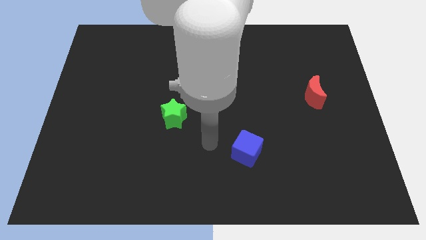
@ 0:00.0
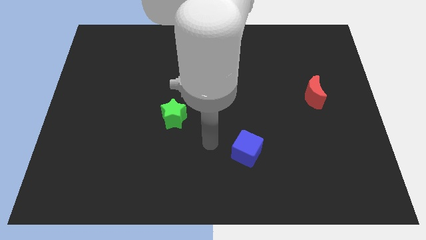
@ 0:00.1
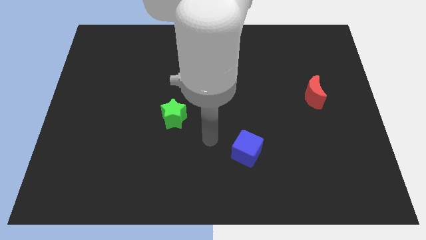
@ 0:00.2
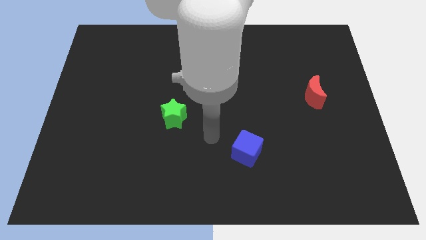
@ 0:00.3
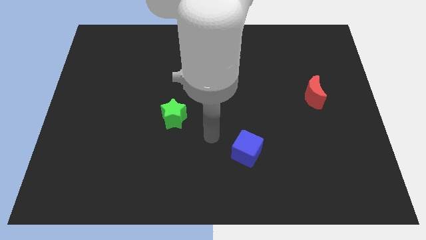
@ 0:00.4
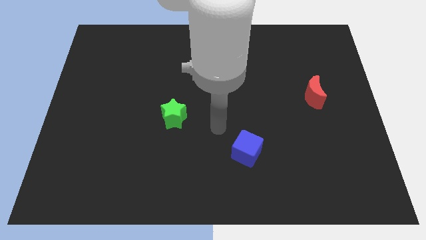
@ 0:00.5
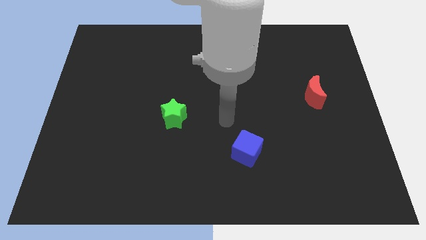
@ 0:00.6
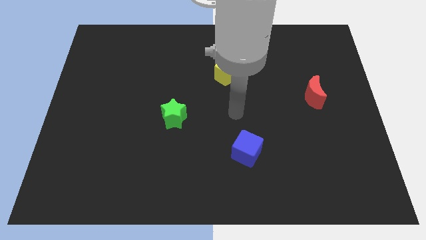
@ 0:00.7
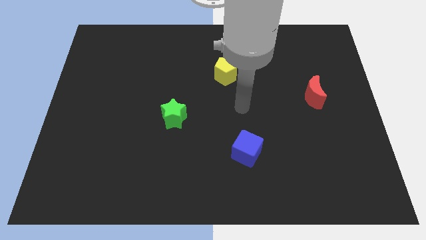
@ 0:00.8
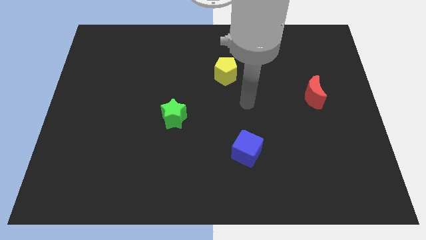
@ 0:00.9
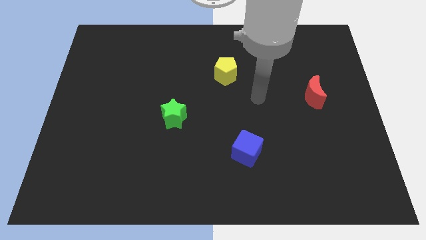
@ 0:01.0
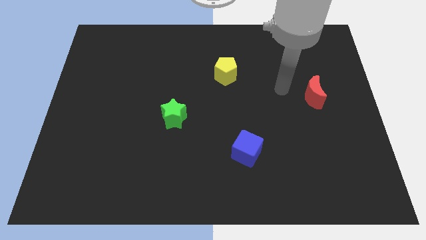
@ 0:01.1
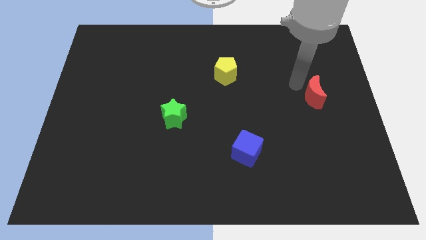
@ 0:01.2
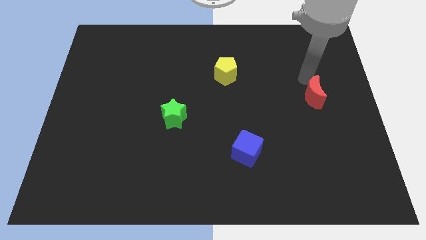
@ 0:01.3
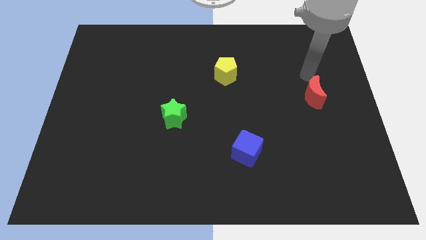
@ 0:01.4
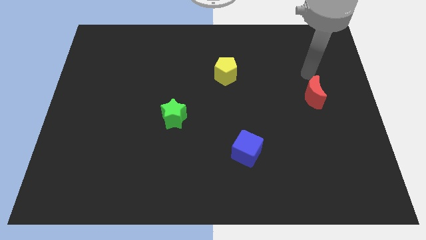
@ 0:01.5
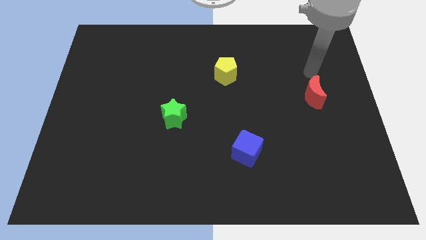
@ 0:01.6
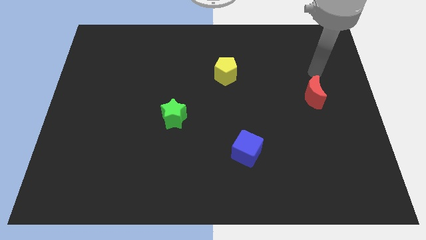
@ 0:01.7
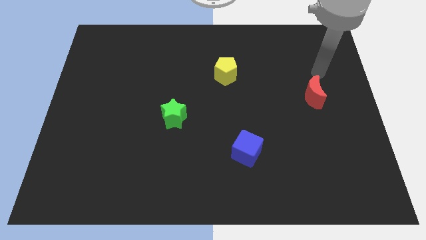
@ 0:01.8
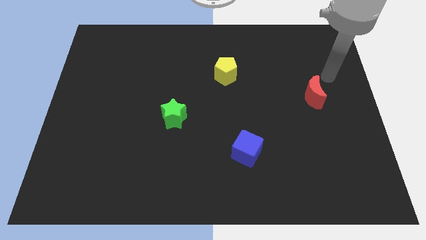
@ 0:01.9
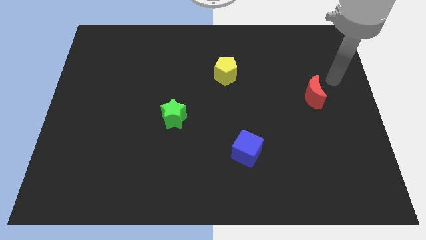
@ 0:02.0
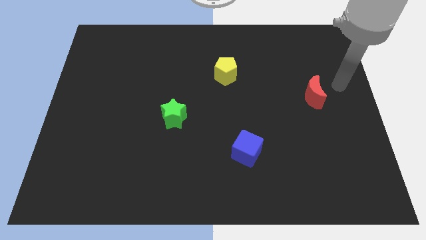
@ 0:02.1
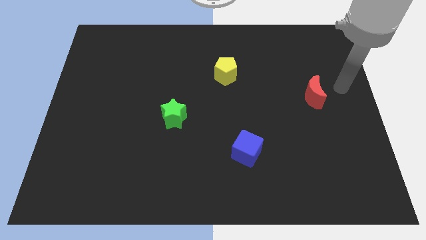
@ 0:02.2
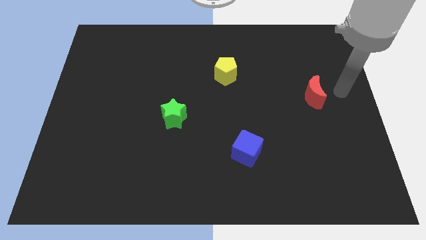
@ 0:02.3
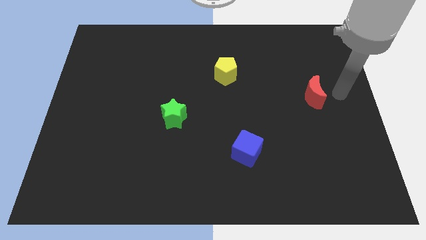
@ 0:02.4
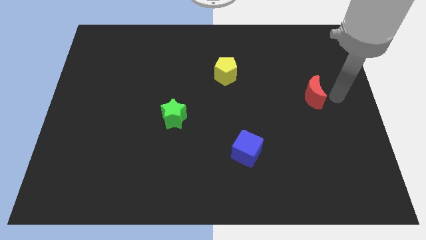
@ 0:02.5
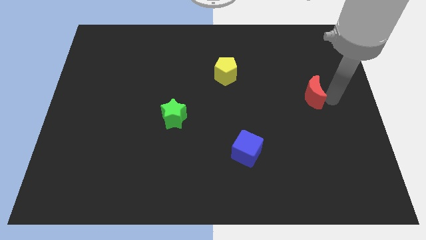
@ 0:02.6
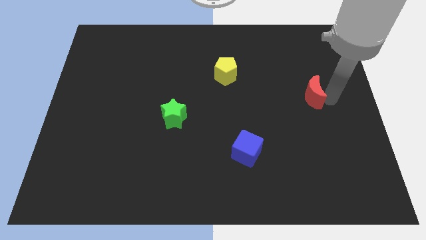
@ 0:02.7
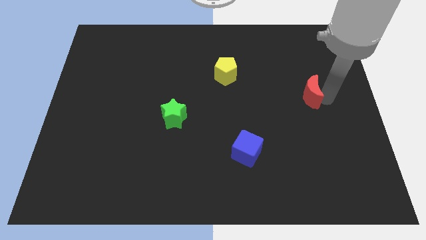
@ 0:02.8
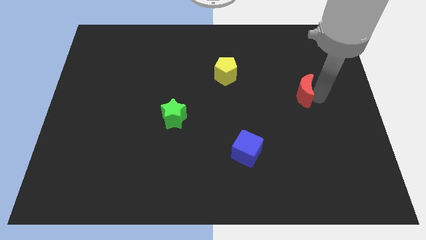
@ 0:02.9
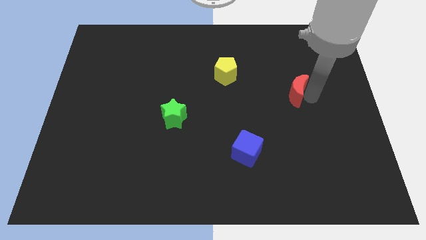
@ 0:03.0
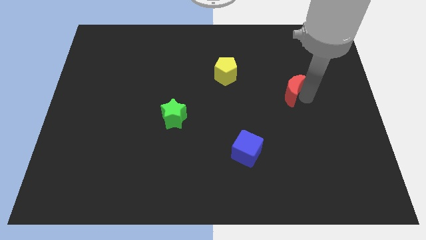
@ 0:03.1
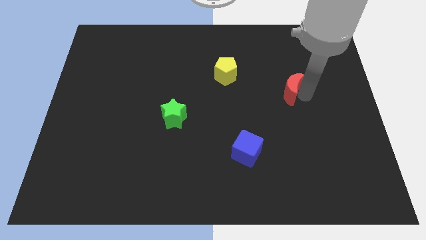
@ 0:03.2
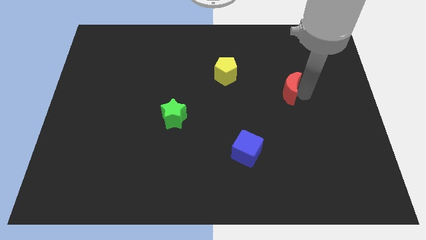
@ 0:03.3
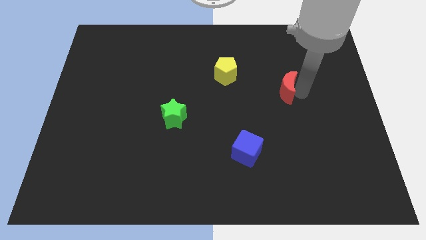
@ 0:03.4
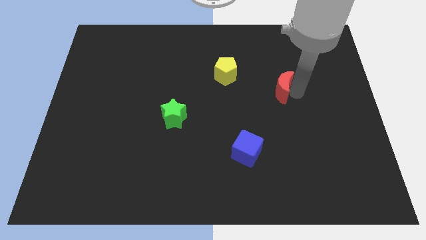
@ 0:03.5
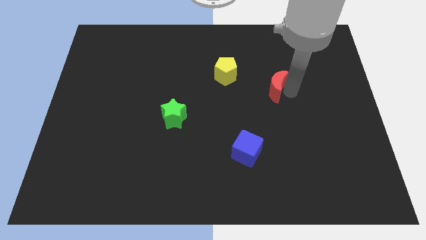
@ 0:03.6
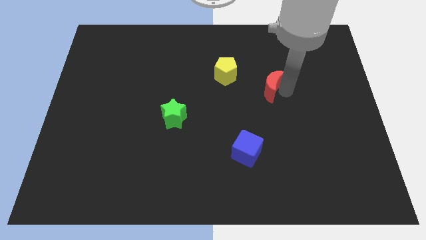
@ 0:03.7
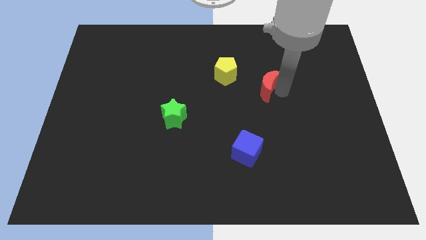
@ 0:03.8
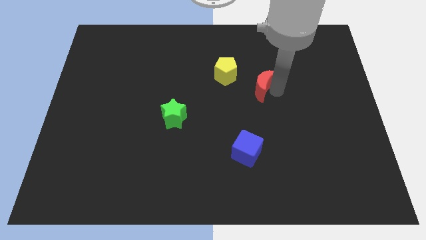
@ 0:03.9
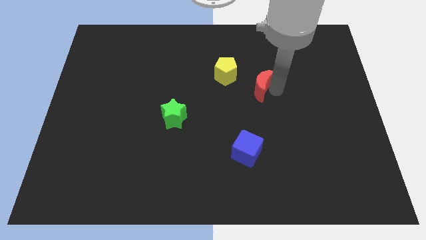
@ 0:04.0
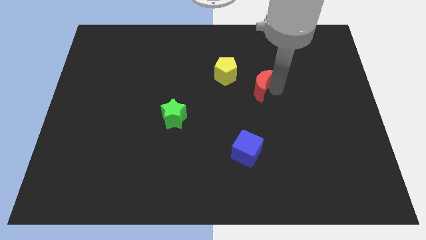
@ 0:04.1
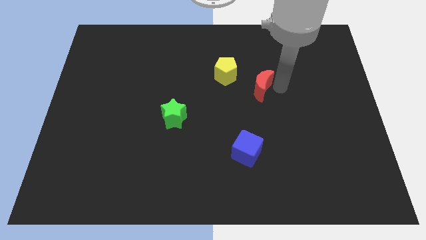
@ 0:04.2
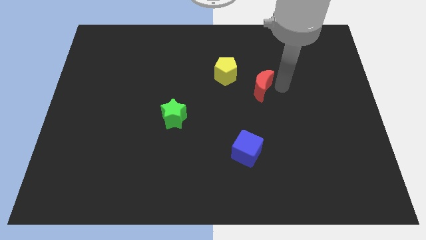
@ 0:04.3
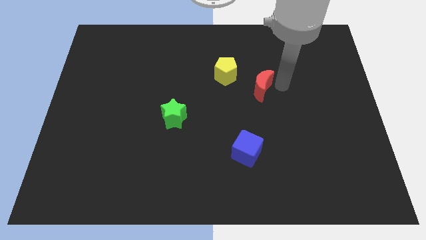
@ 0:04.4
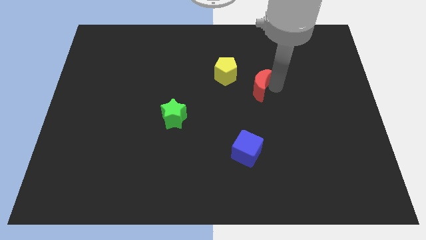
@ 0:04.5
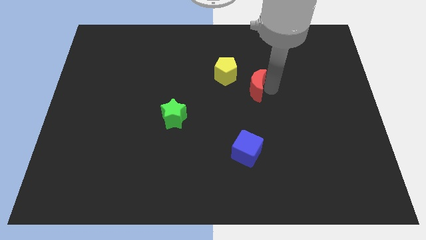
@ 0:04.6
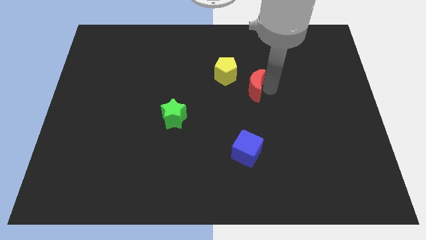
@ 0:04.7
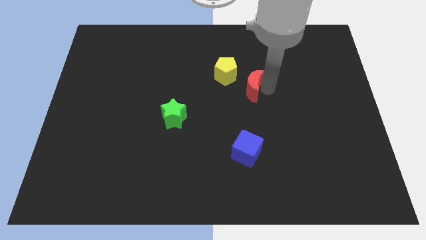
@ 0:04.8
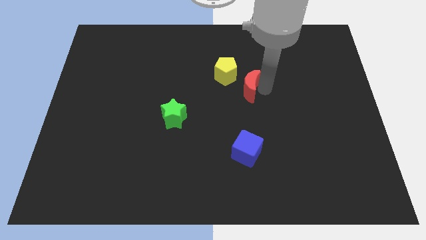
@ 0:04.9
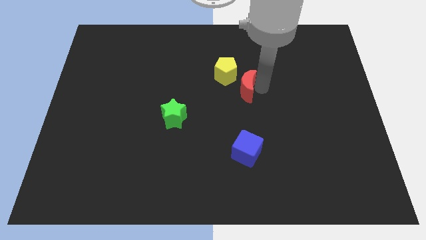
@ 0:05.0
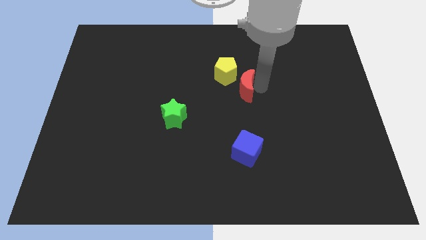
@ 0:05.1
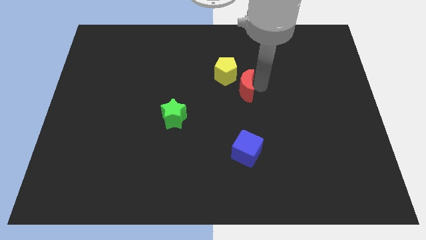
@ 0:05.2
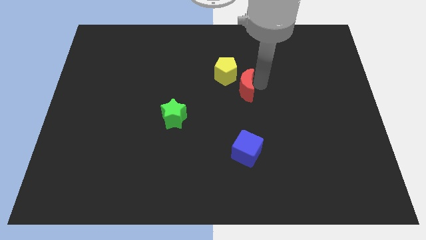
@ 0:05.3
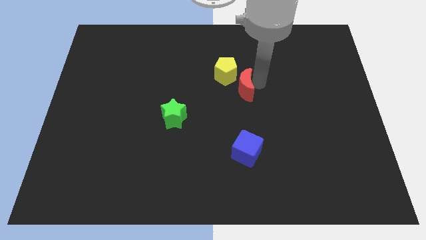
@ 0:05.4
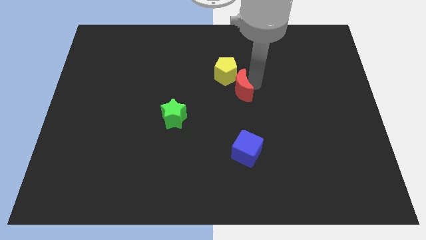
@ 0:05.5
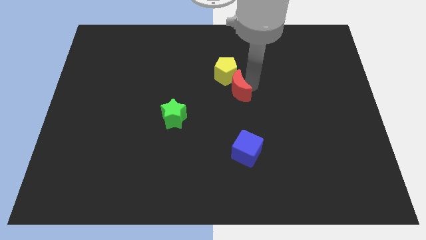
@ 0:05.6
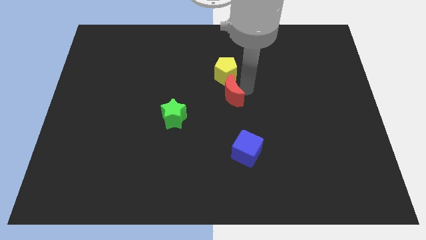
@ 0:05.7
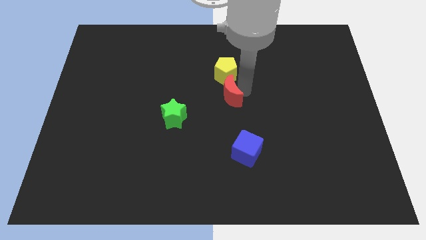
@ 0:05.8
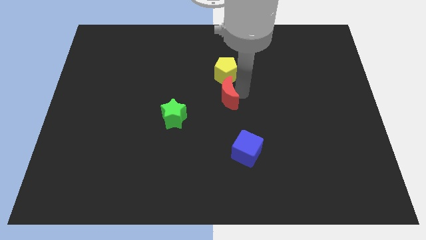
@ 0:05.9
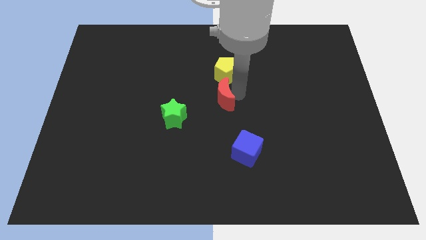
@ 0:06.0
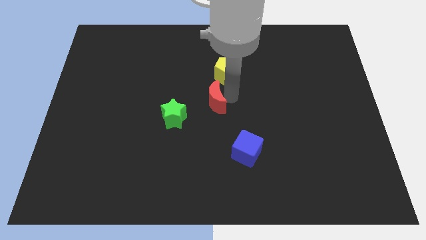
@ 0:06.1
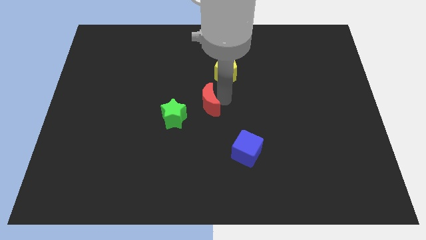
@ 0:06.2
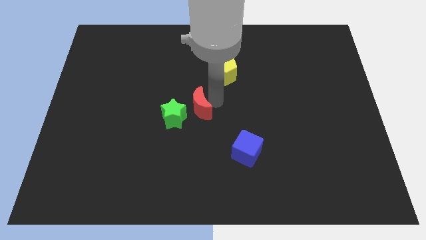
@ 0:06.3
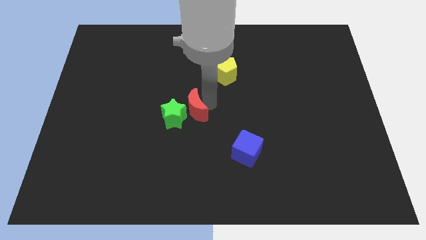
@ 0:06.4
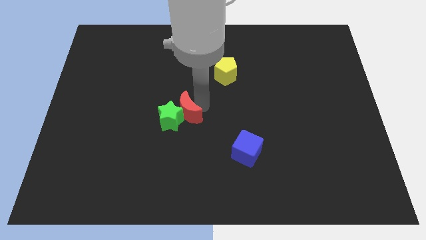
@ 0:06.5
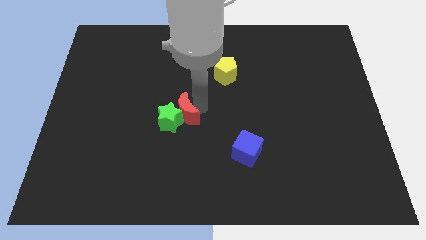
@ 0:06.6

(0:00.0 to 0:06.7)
move the red block to the green block

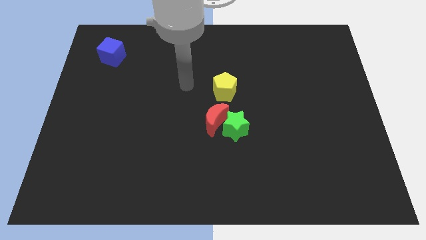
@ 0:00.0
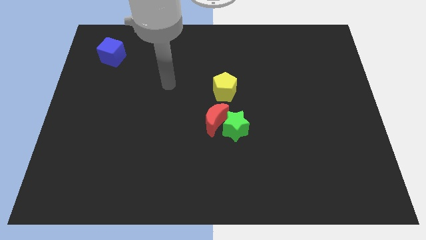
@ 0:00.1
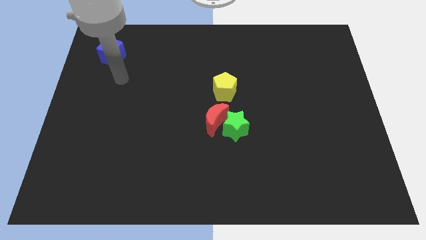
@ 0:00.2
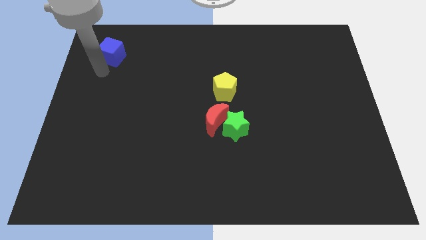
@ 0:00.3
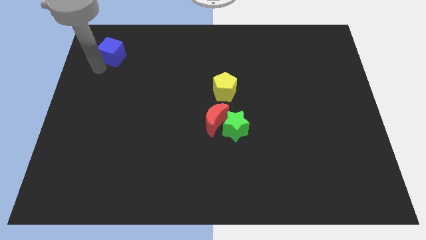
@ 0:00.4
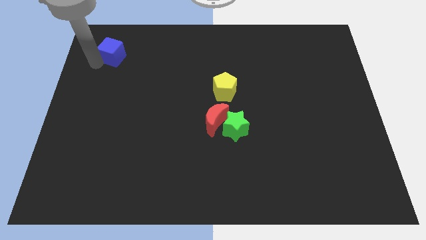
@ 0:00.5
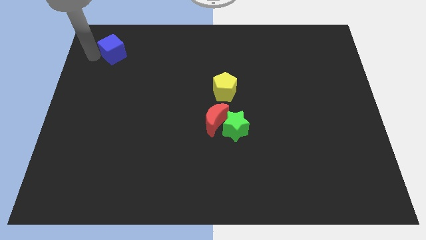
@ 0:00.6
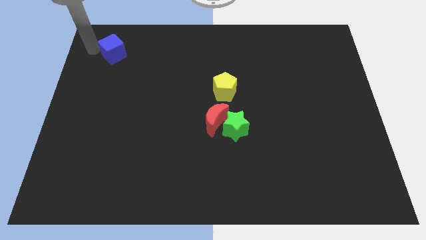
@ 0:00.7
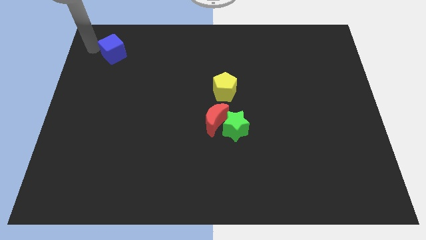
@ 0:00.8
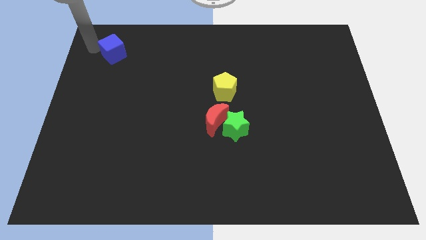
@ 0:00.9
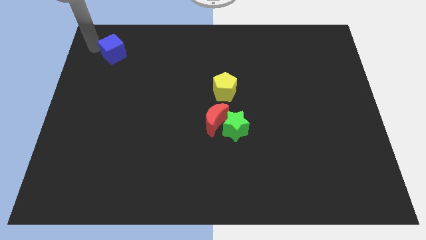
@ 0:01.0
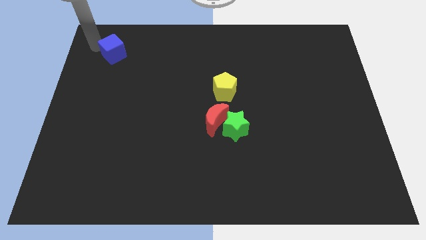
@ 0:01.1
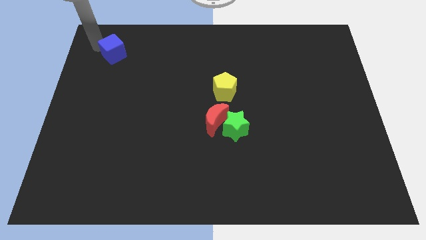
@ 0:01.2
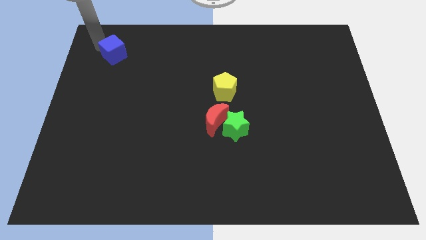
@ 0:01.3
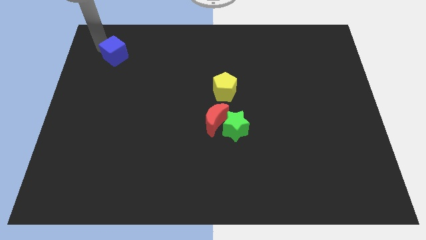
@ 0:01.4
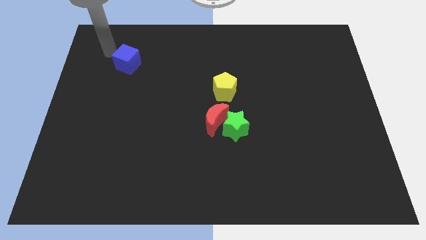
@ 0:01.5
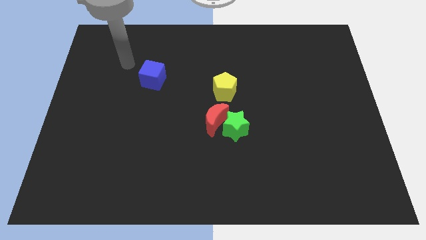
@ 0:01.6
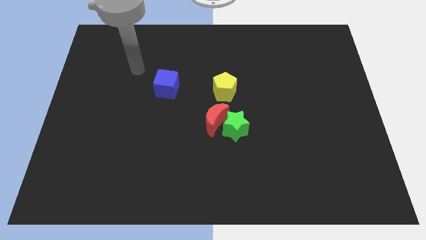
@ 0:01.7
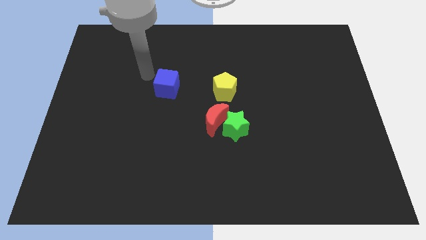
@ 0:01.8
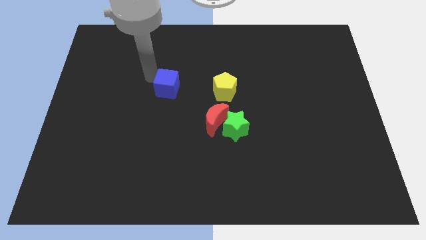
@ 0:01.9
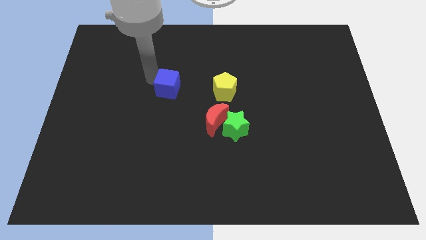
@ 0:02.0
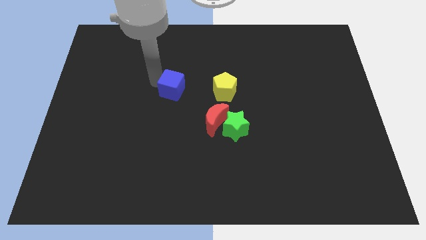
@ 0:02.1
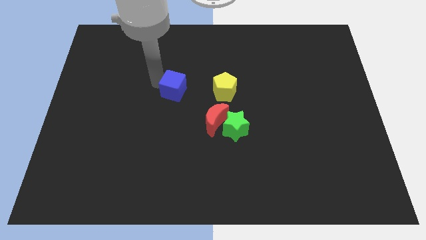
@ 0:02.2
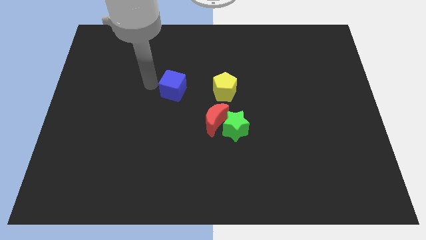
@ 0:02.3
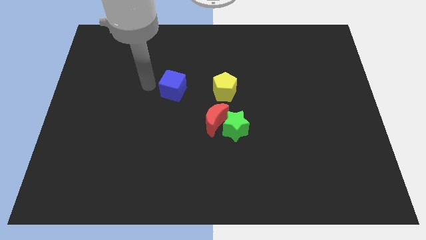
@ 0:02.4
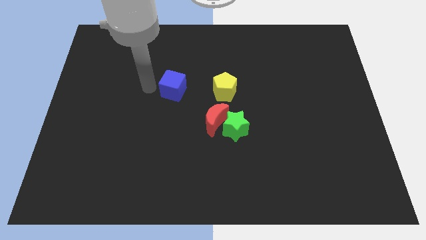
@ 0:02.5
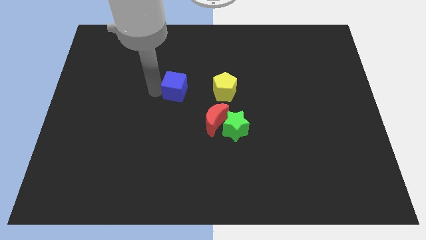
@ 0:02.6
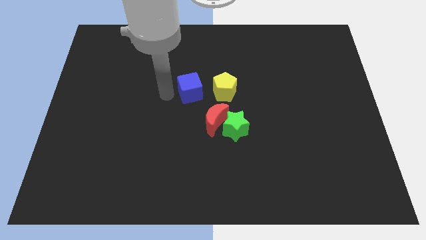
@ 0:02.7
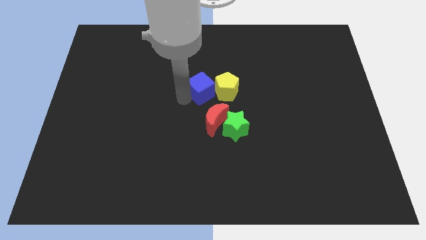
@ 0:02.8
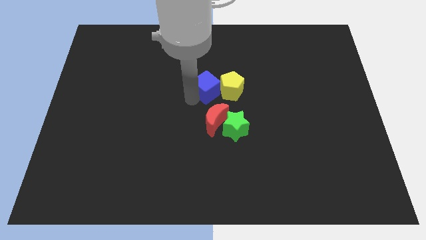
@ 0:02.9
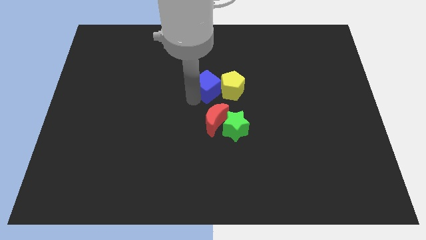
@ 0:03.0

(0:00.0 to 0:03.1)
slide the blue block towards the pentagon
